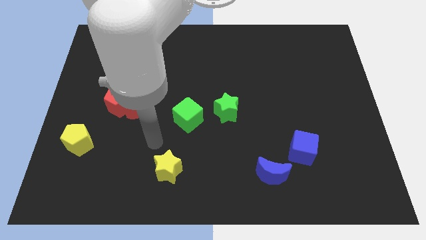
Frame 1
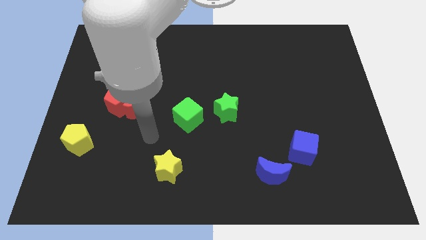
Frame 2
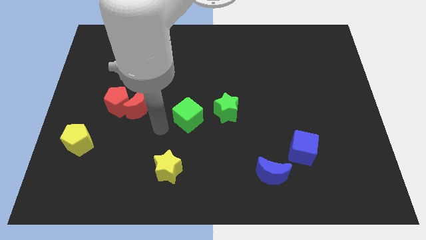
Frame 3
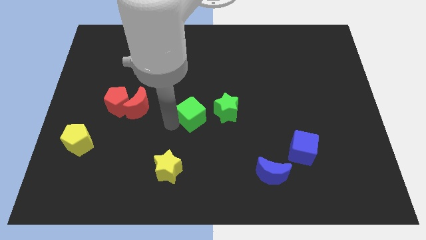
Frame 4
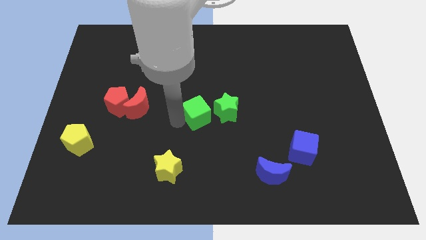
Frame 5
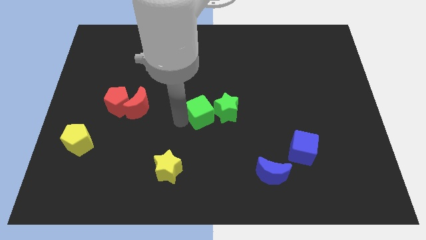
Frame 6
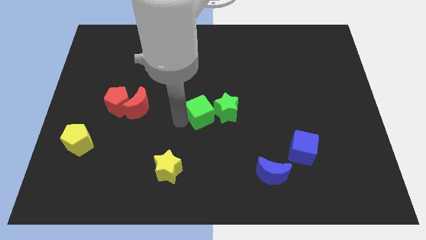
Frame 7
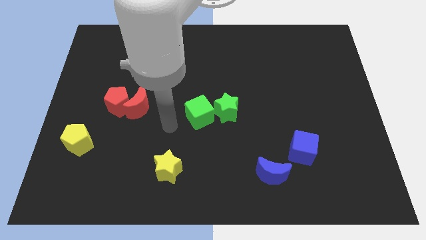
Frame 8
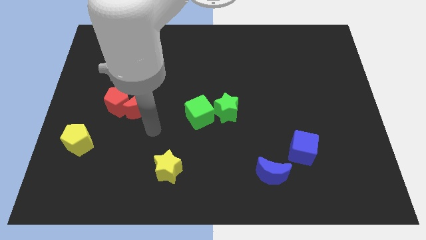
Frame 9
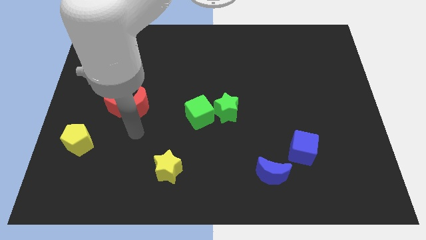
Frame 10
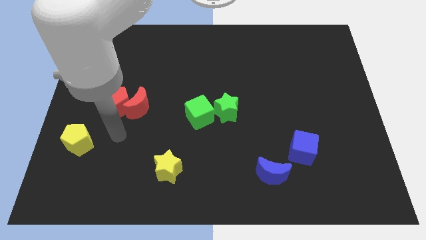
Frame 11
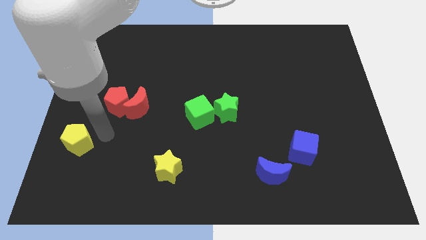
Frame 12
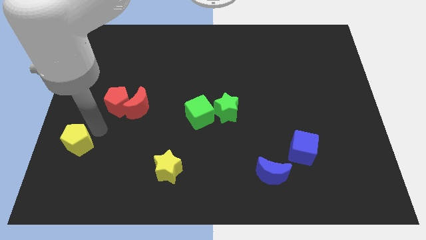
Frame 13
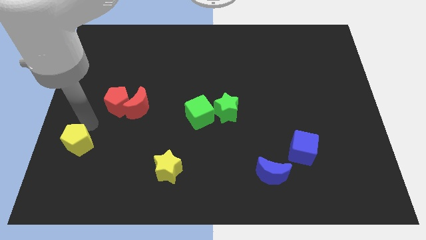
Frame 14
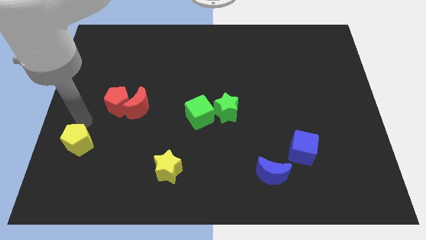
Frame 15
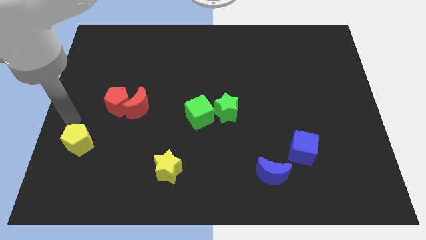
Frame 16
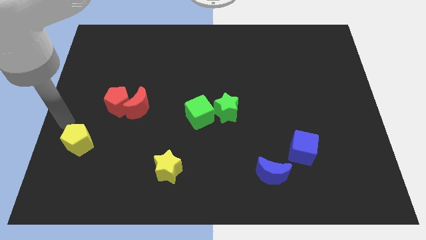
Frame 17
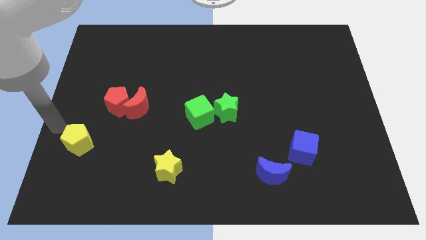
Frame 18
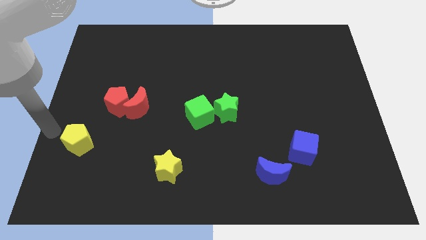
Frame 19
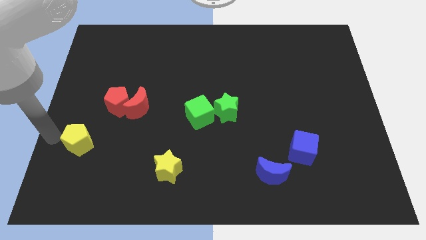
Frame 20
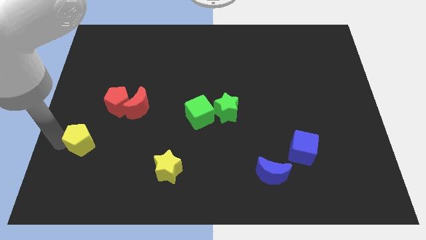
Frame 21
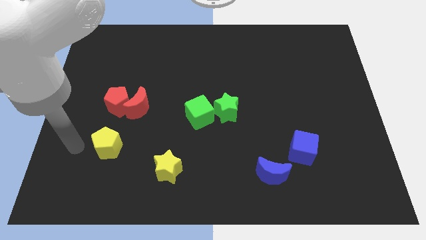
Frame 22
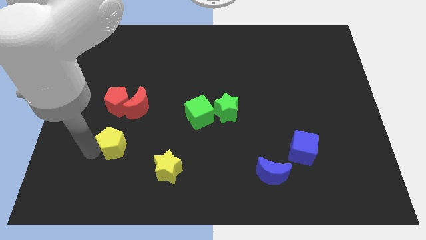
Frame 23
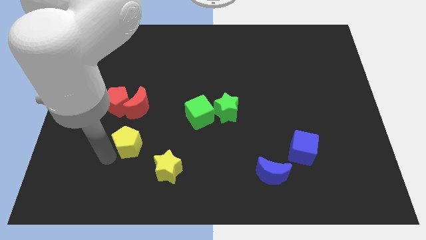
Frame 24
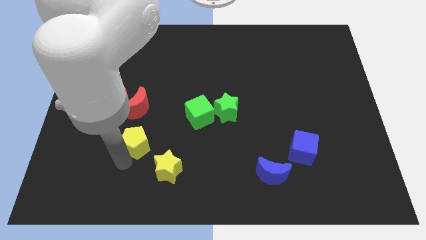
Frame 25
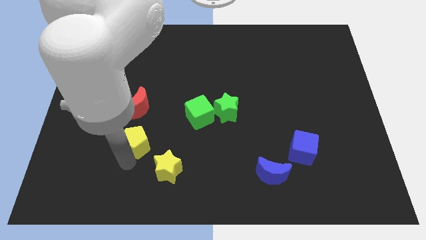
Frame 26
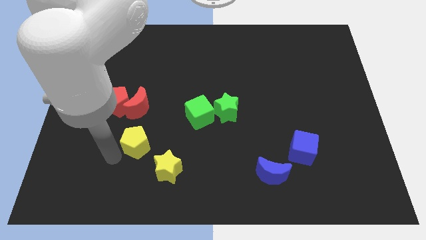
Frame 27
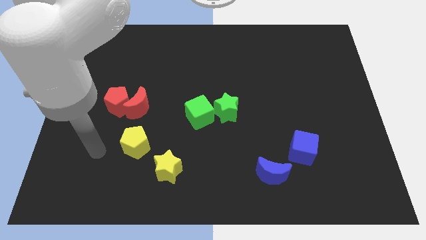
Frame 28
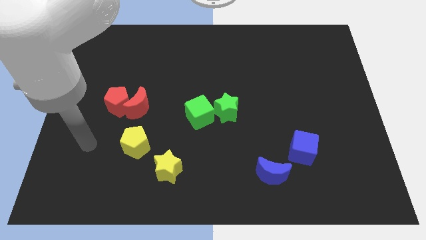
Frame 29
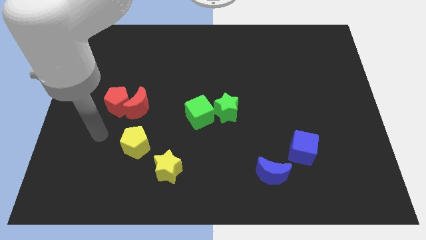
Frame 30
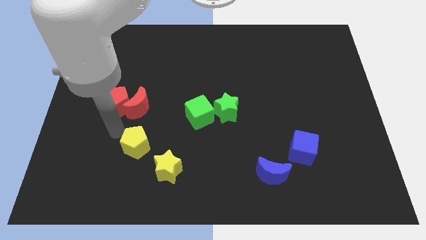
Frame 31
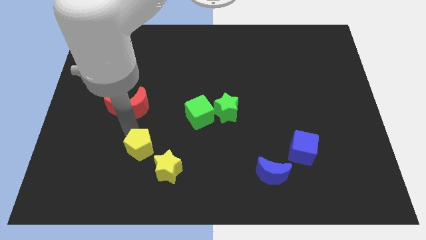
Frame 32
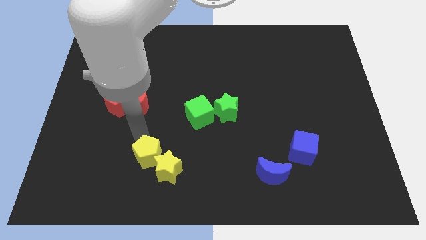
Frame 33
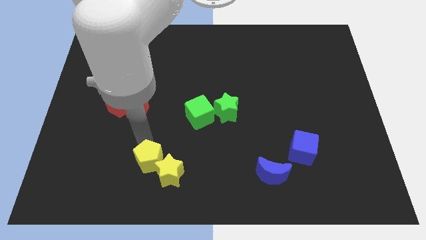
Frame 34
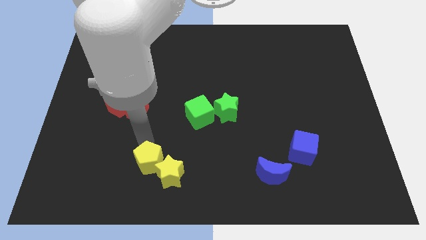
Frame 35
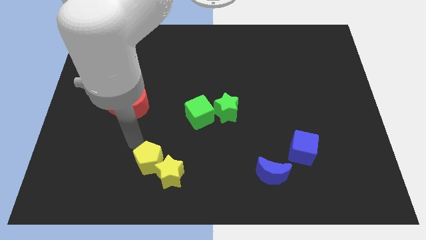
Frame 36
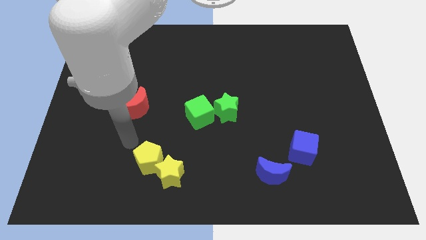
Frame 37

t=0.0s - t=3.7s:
push the yellow pentagon into the yellow star

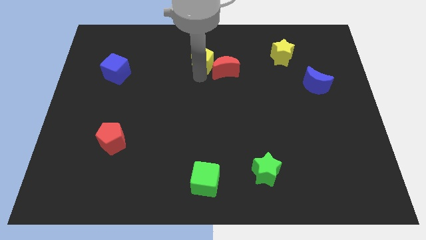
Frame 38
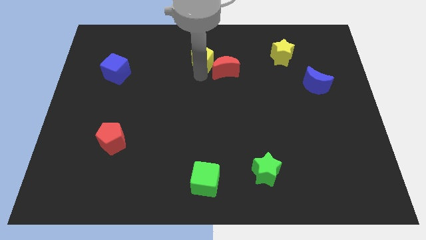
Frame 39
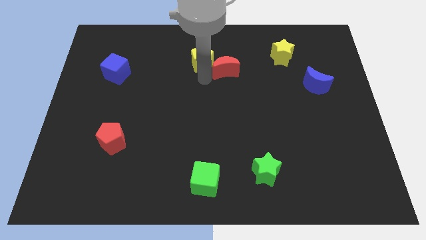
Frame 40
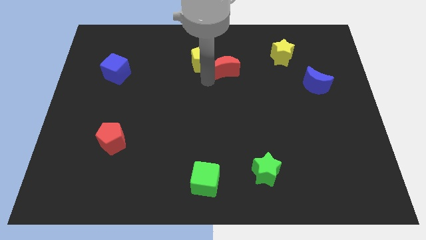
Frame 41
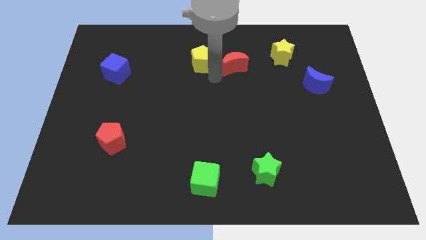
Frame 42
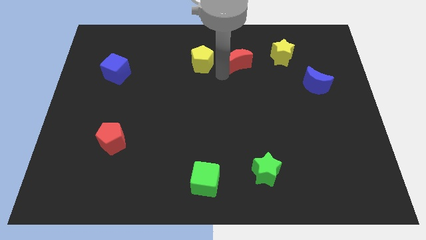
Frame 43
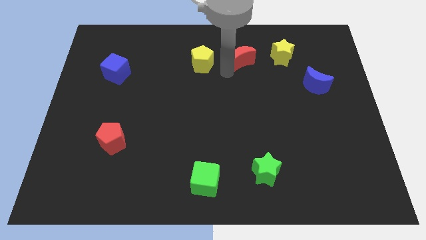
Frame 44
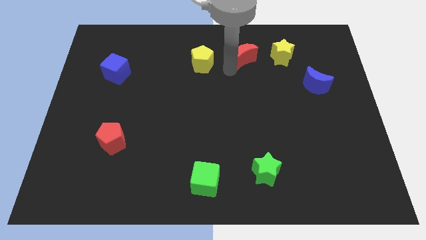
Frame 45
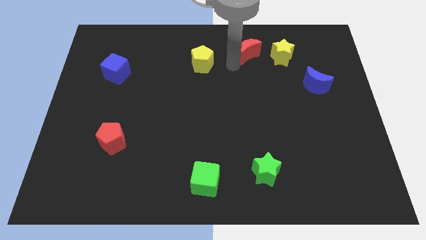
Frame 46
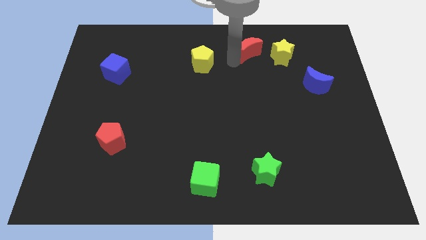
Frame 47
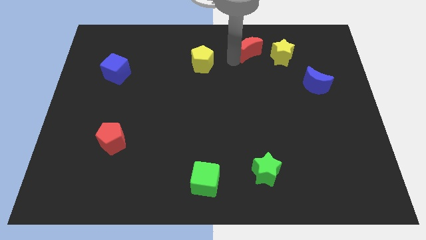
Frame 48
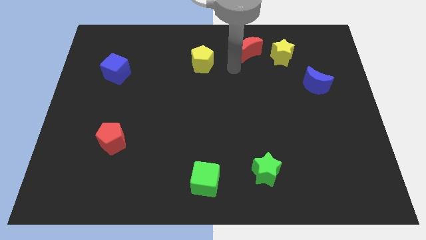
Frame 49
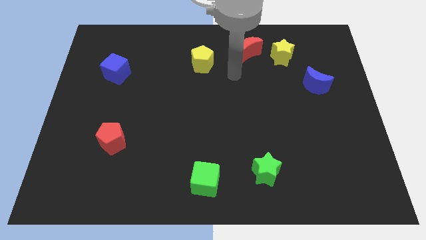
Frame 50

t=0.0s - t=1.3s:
move the red moon away from the yellow pentagon

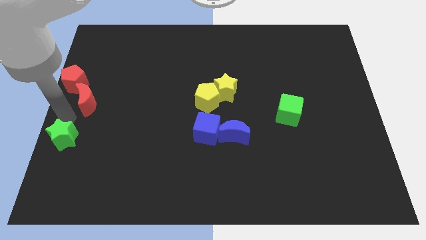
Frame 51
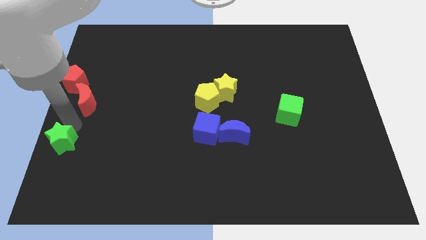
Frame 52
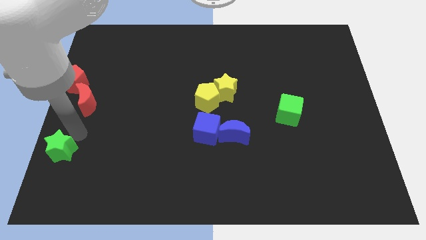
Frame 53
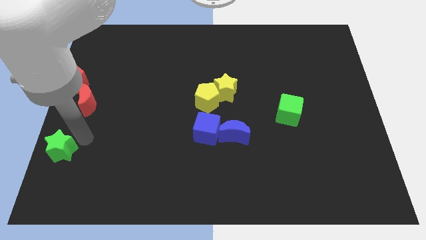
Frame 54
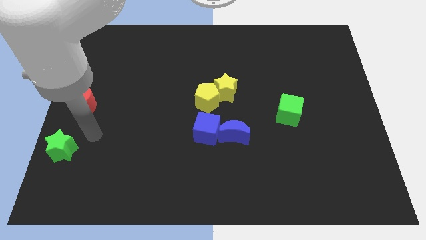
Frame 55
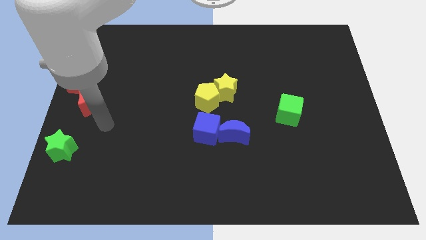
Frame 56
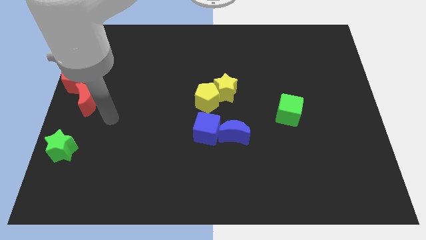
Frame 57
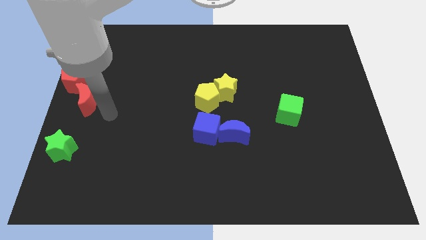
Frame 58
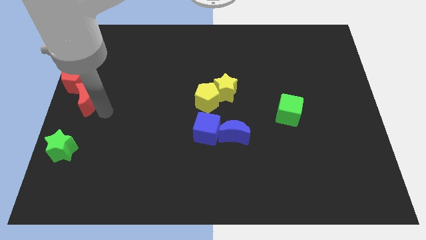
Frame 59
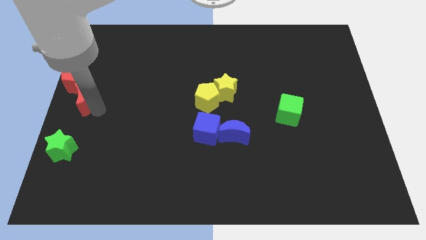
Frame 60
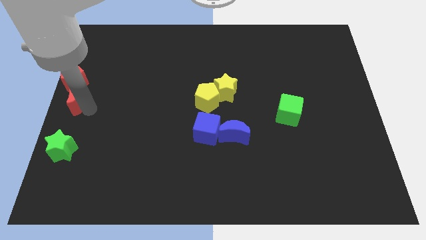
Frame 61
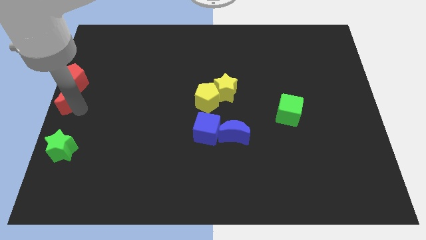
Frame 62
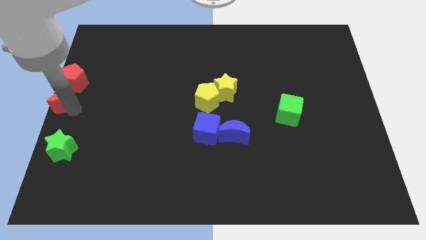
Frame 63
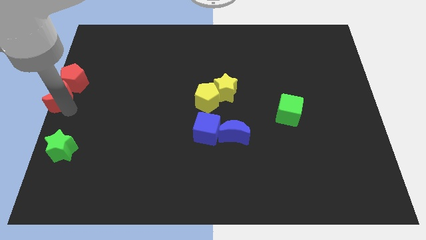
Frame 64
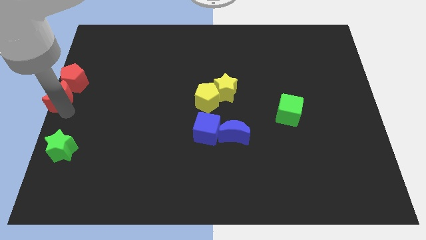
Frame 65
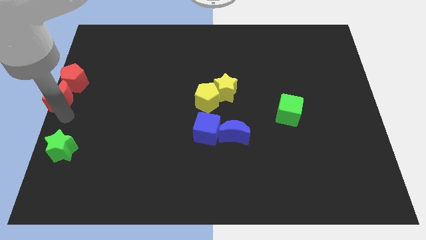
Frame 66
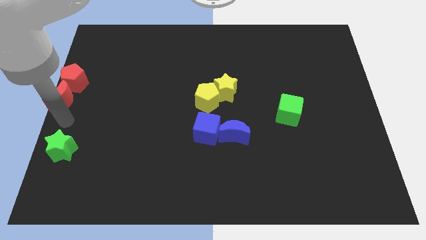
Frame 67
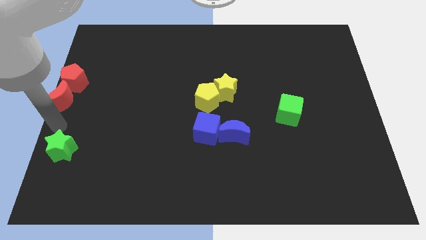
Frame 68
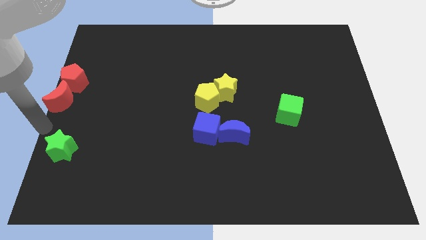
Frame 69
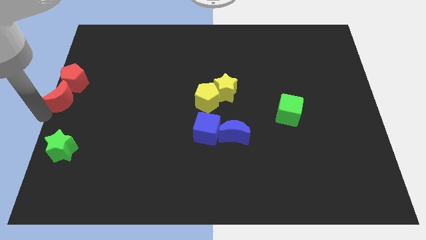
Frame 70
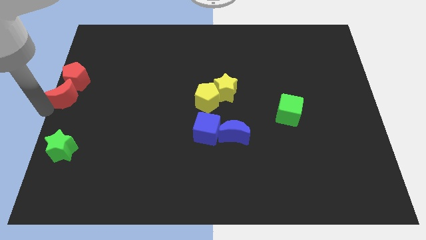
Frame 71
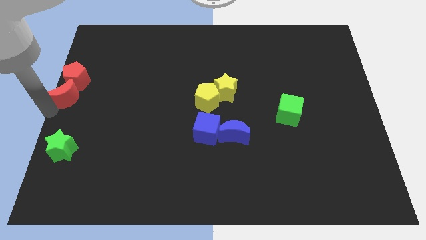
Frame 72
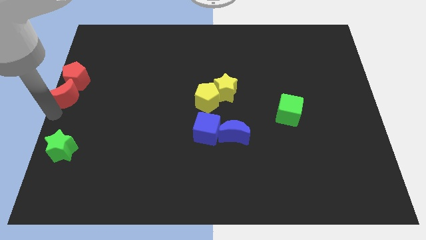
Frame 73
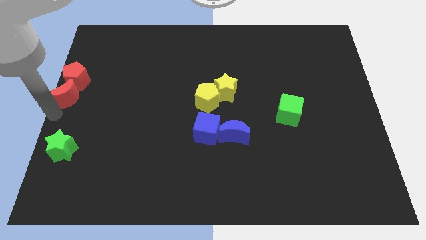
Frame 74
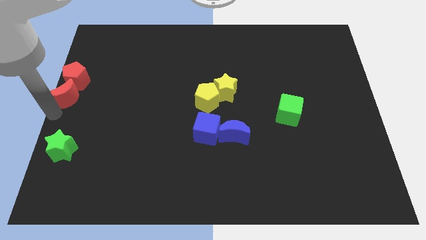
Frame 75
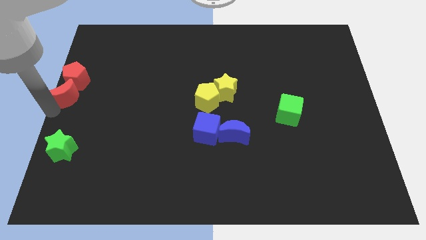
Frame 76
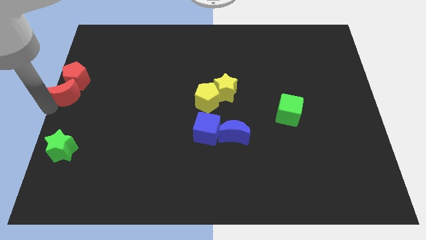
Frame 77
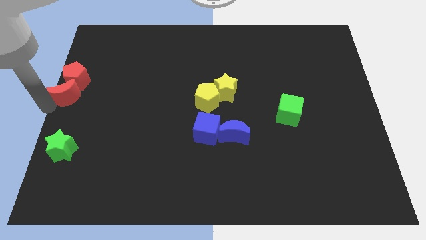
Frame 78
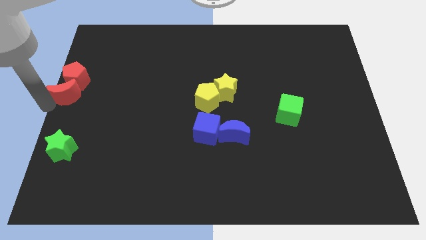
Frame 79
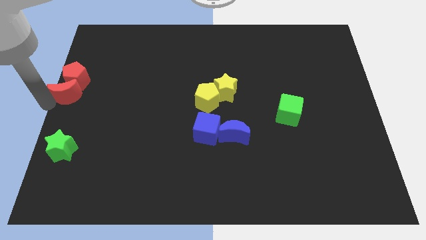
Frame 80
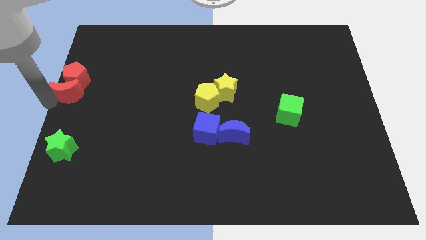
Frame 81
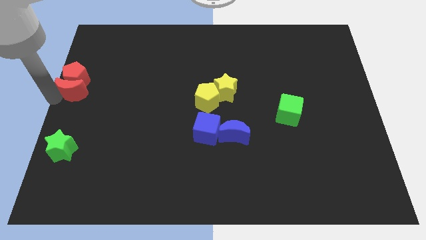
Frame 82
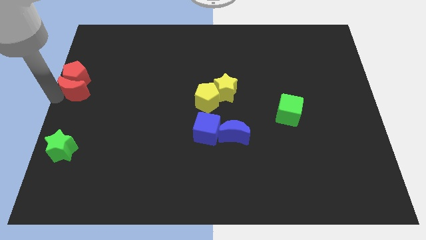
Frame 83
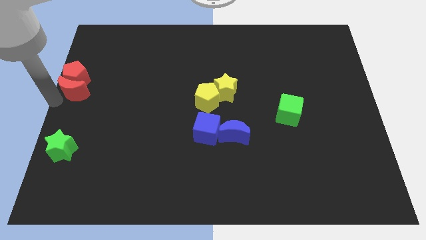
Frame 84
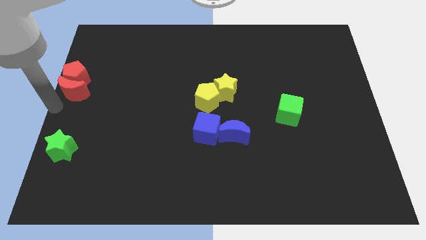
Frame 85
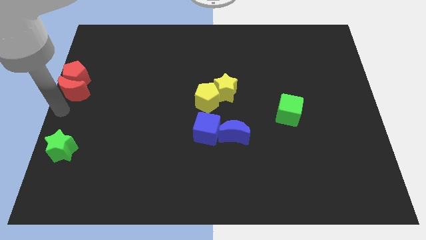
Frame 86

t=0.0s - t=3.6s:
push the red crescent to the bottom of the red pentagon

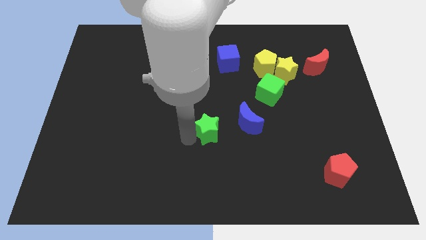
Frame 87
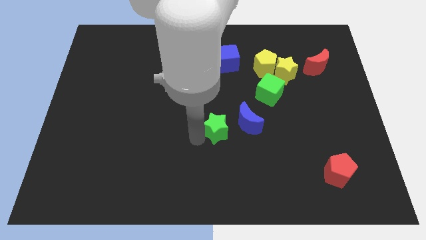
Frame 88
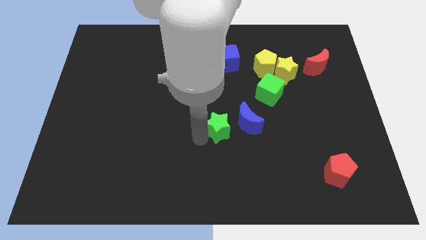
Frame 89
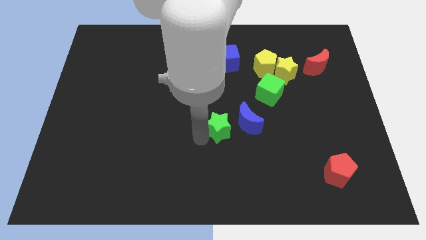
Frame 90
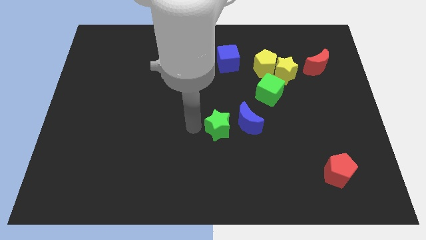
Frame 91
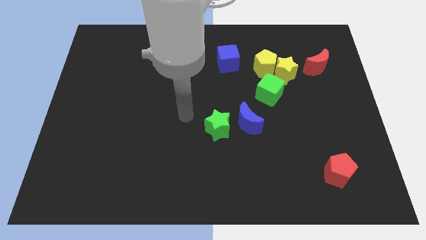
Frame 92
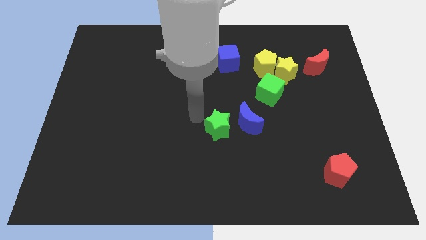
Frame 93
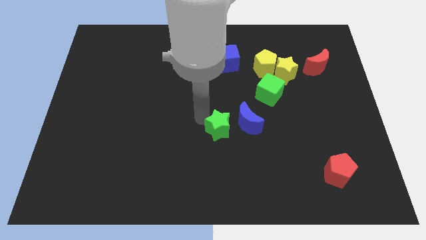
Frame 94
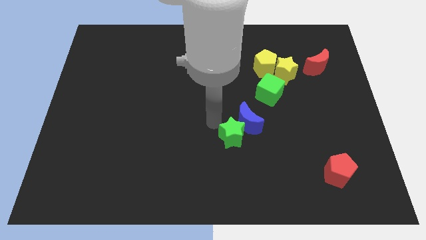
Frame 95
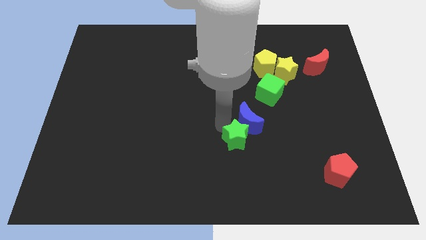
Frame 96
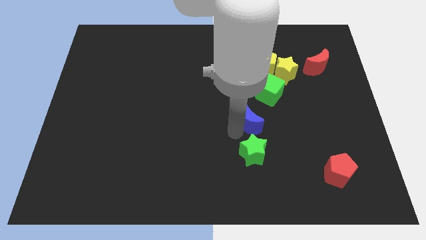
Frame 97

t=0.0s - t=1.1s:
push the green star to the bottom of the blue crescent
